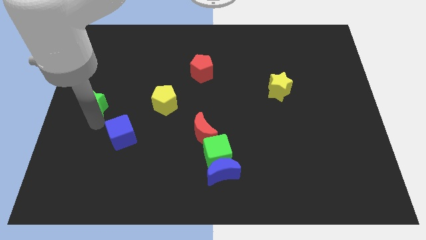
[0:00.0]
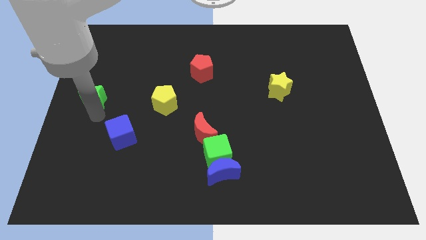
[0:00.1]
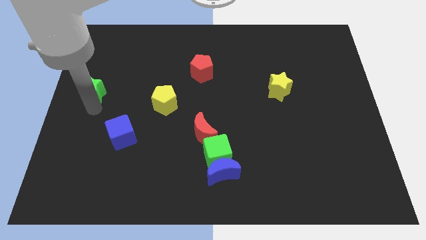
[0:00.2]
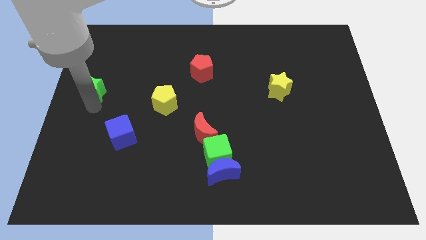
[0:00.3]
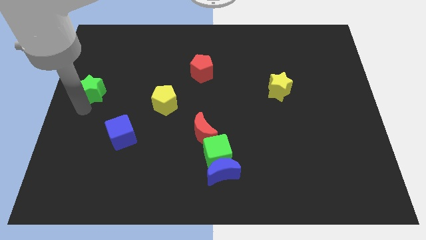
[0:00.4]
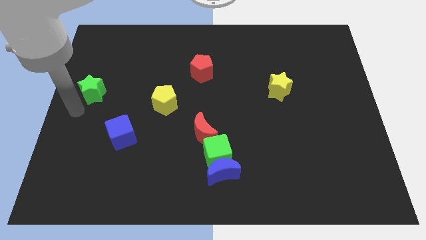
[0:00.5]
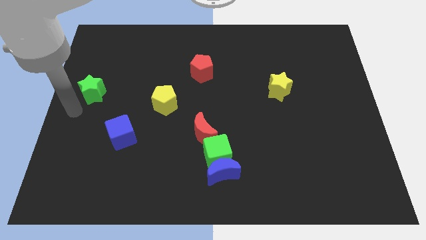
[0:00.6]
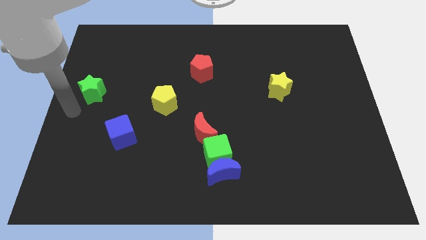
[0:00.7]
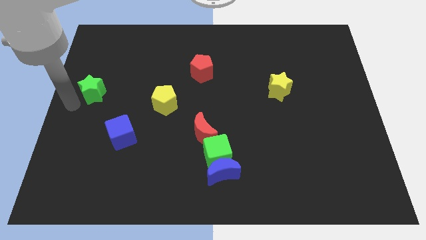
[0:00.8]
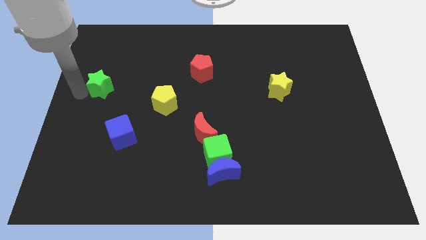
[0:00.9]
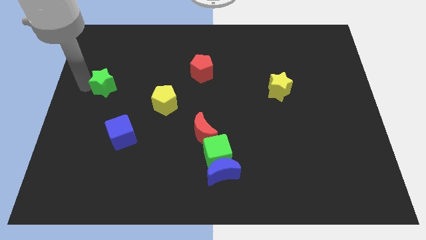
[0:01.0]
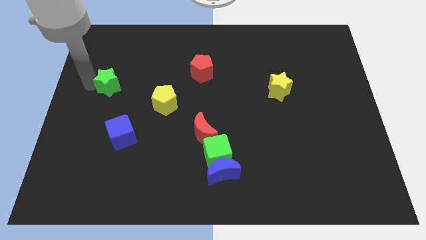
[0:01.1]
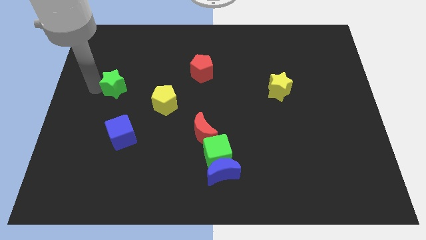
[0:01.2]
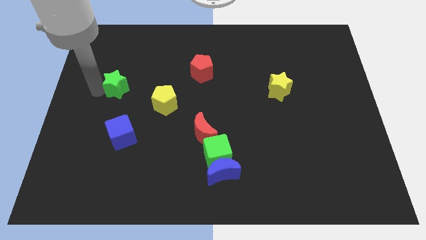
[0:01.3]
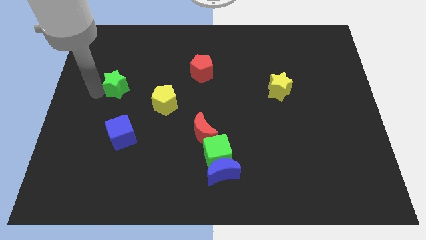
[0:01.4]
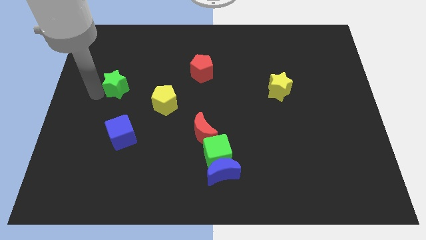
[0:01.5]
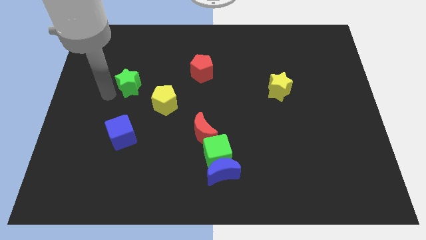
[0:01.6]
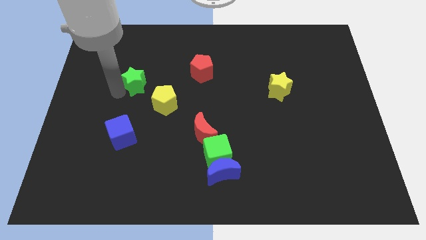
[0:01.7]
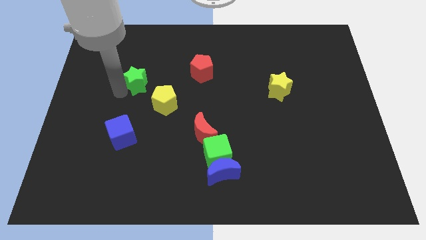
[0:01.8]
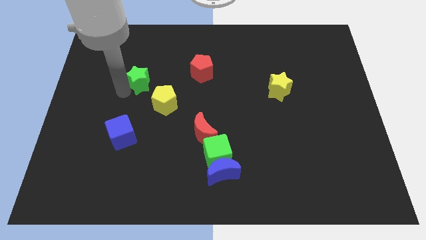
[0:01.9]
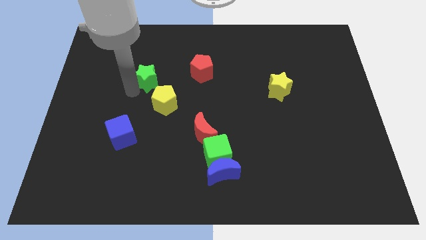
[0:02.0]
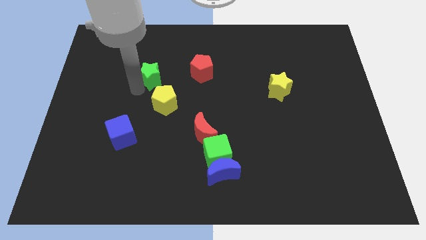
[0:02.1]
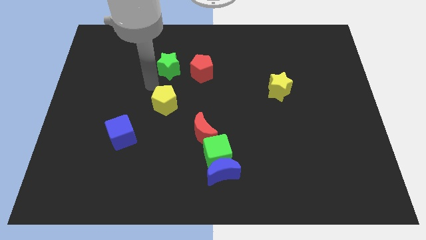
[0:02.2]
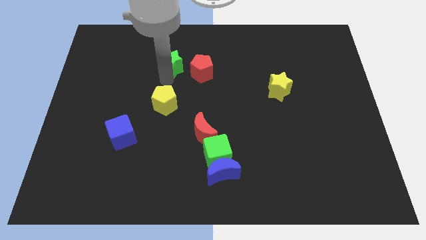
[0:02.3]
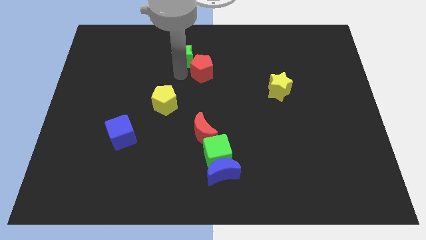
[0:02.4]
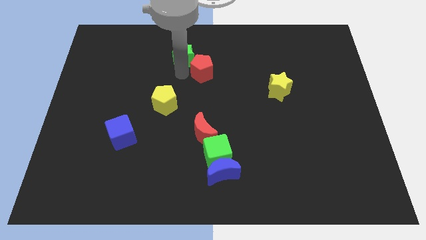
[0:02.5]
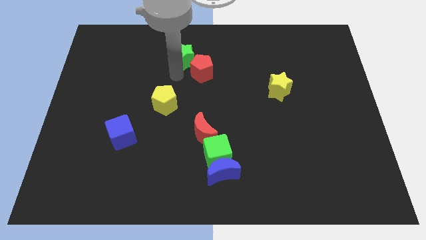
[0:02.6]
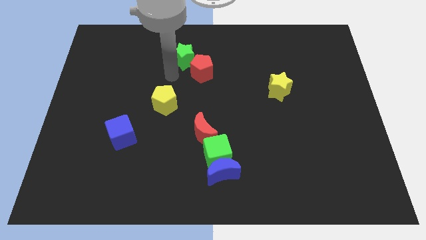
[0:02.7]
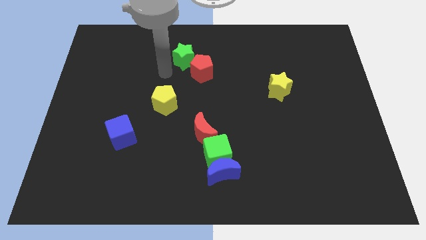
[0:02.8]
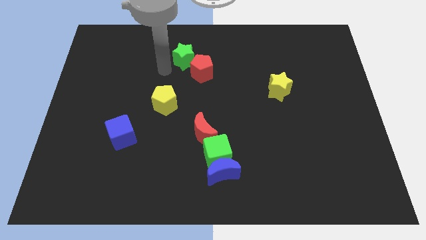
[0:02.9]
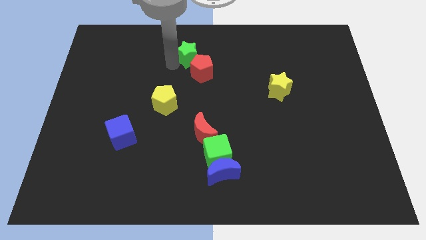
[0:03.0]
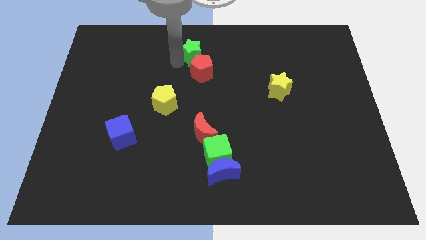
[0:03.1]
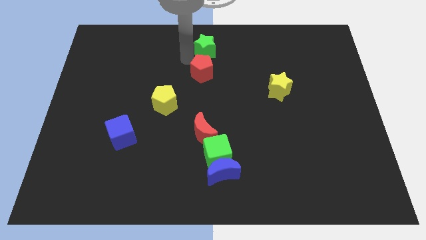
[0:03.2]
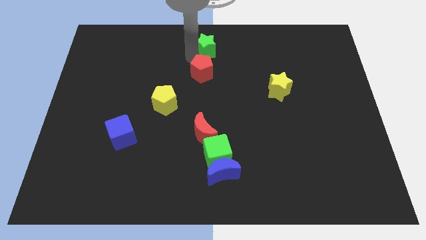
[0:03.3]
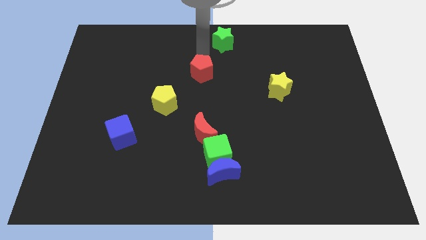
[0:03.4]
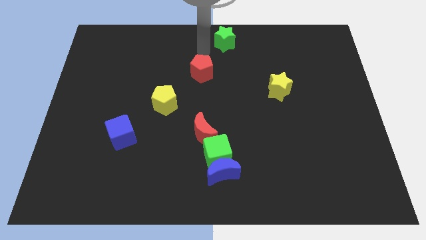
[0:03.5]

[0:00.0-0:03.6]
move the green star to the top center of the board

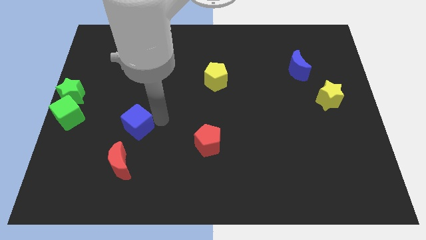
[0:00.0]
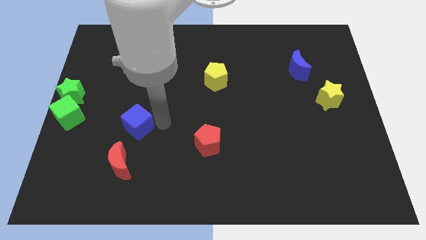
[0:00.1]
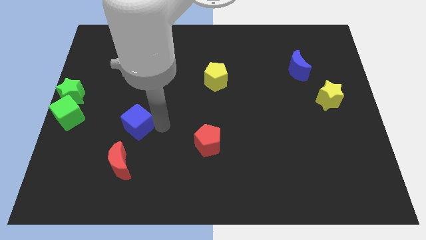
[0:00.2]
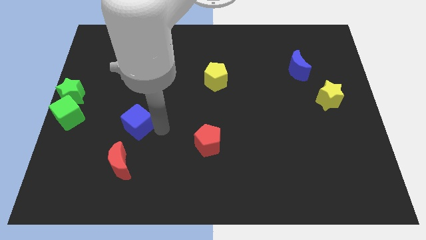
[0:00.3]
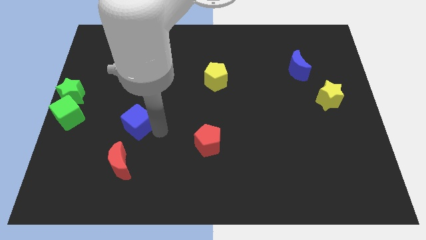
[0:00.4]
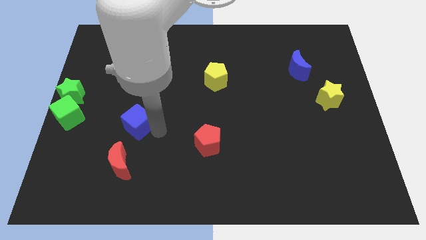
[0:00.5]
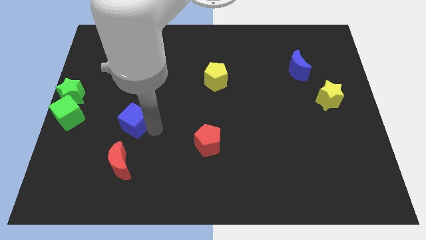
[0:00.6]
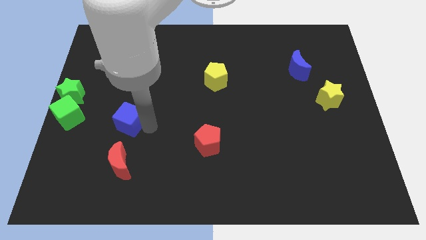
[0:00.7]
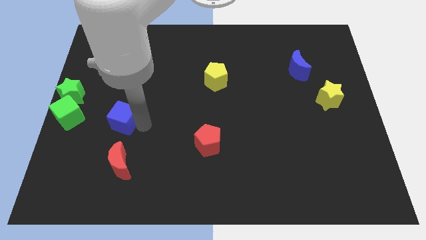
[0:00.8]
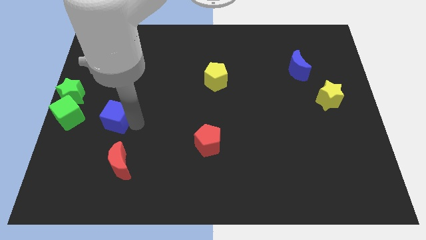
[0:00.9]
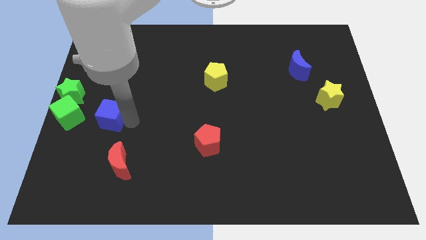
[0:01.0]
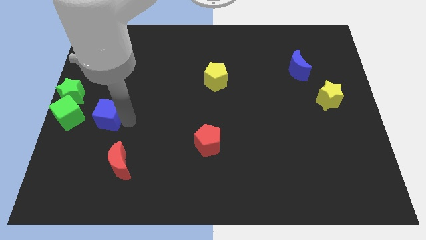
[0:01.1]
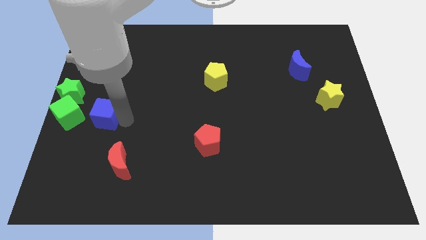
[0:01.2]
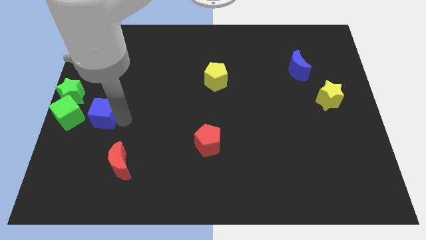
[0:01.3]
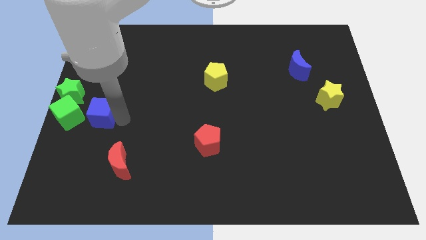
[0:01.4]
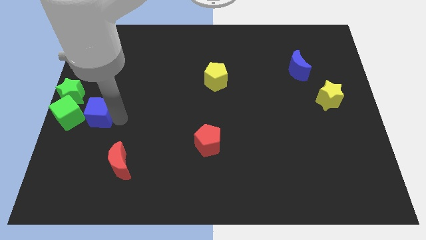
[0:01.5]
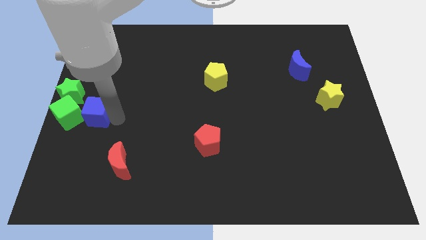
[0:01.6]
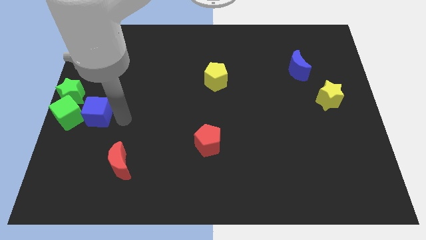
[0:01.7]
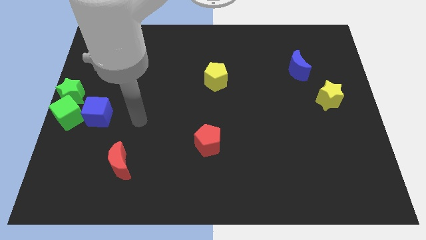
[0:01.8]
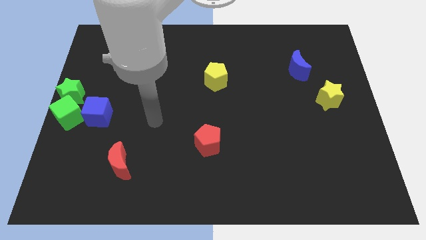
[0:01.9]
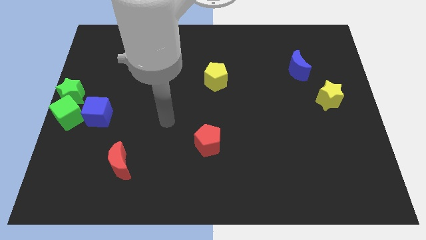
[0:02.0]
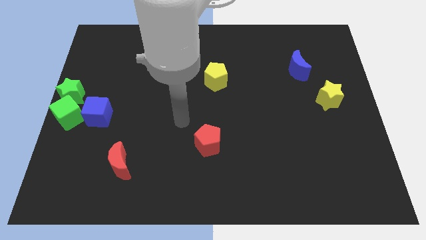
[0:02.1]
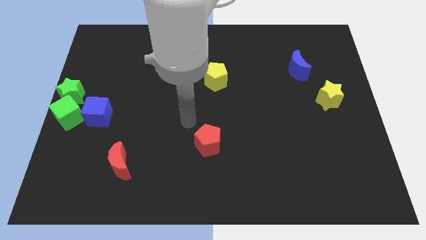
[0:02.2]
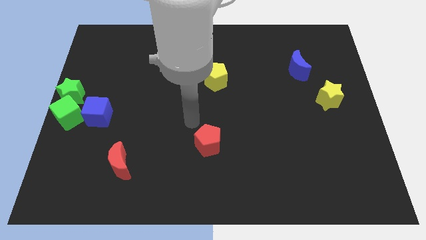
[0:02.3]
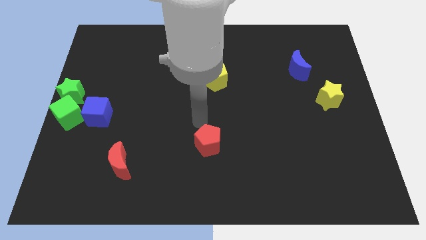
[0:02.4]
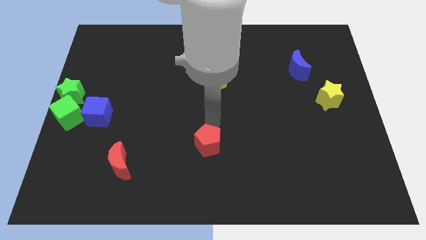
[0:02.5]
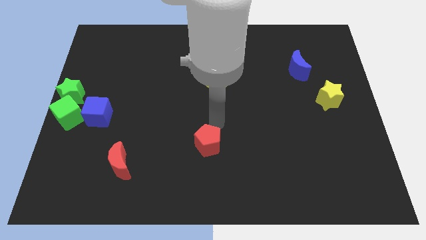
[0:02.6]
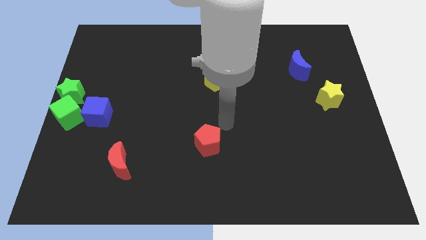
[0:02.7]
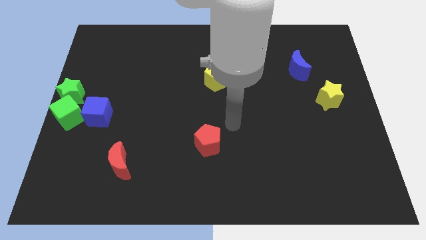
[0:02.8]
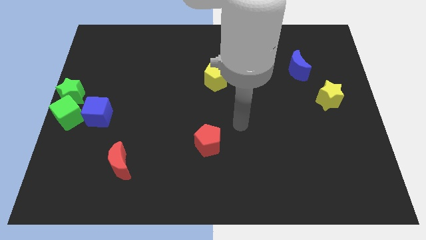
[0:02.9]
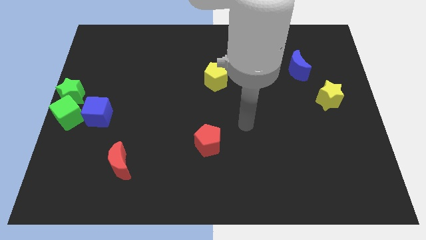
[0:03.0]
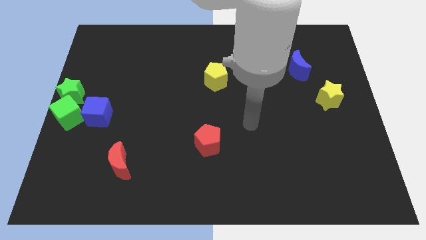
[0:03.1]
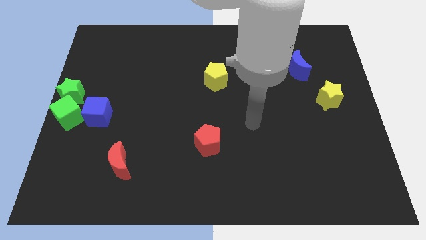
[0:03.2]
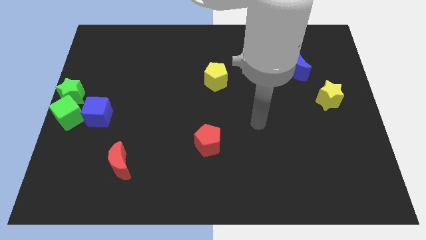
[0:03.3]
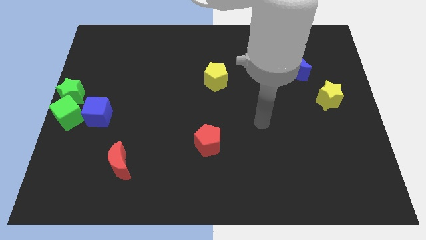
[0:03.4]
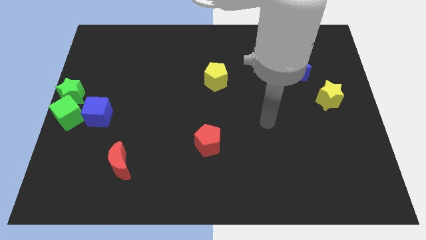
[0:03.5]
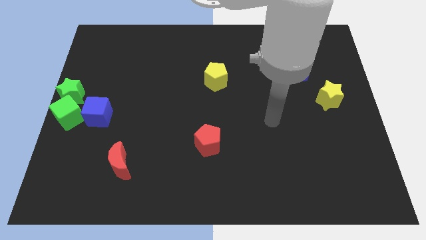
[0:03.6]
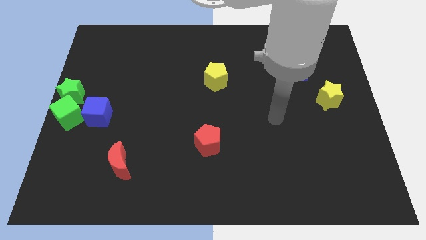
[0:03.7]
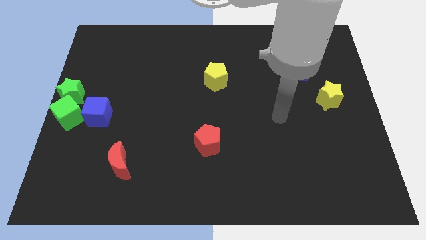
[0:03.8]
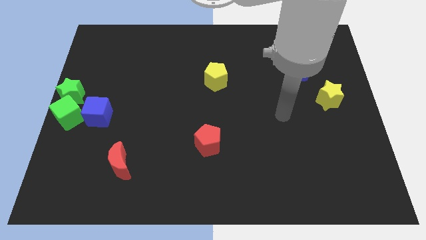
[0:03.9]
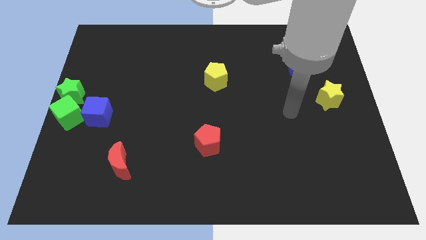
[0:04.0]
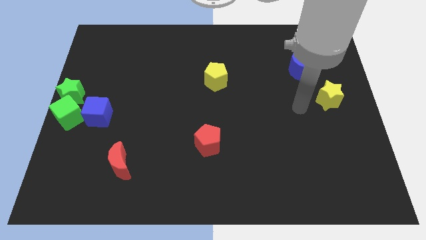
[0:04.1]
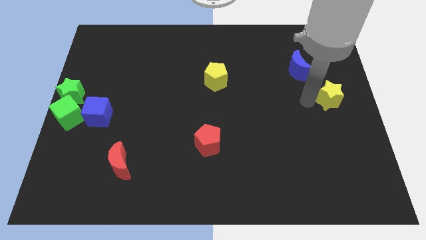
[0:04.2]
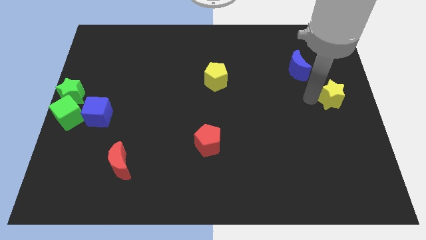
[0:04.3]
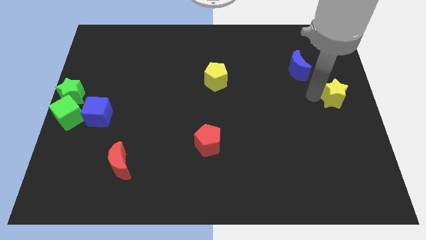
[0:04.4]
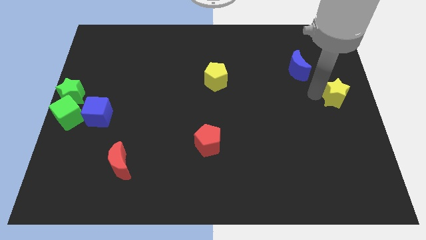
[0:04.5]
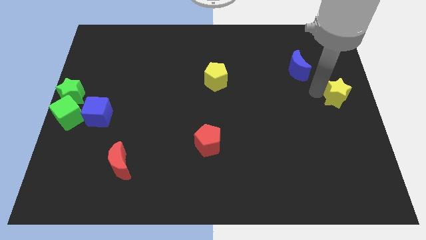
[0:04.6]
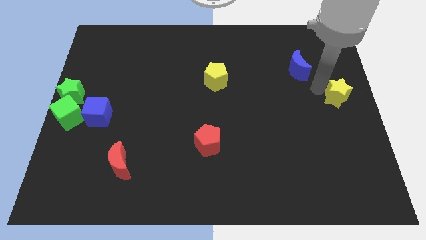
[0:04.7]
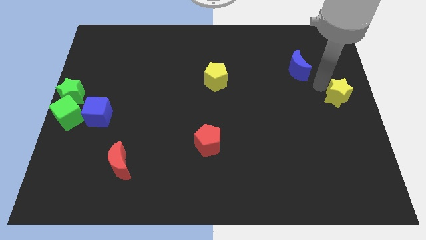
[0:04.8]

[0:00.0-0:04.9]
slightly tap the yellow star towards the center right

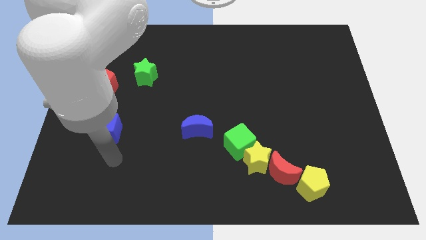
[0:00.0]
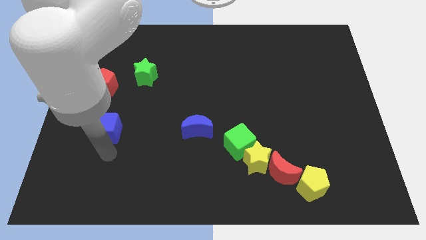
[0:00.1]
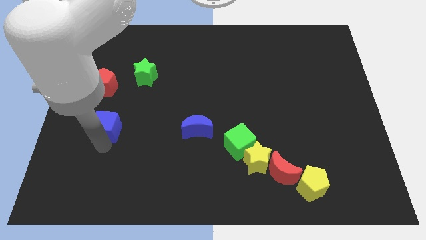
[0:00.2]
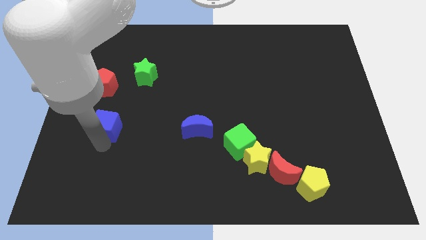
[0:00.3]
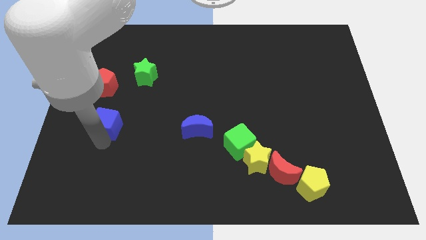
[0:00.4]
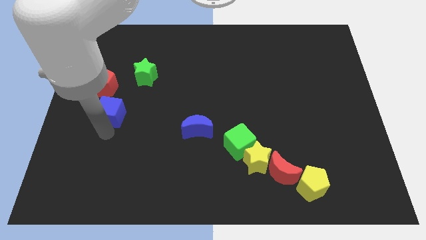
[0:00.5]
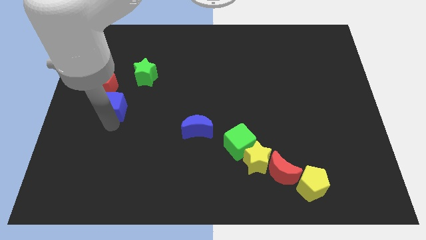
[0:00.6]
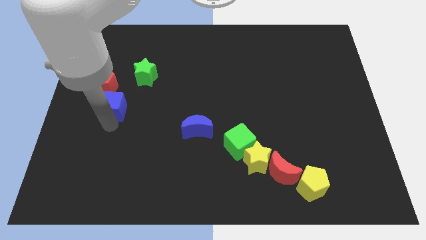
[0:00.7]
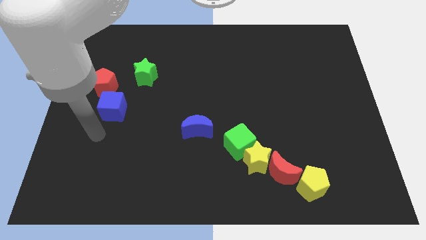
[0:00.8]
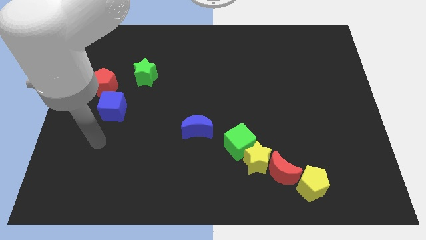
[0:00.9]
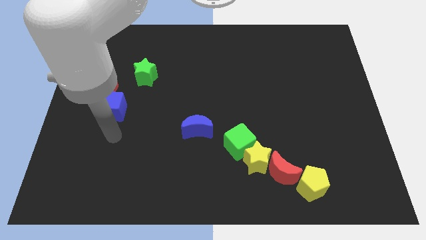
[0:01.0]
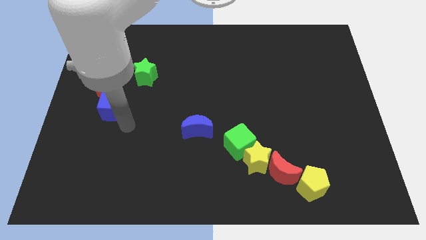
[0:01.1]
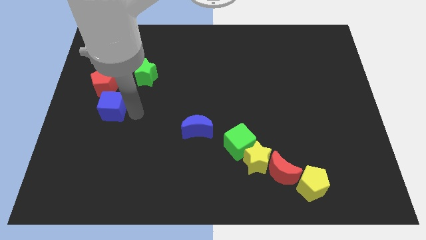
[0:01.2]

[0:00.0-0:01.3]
put the blue cube at the bottom right side of the red pentagon
